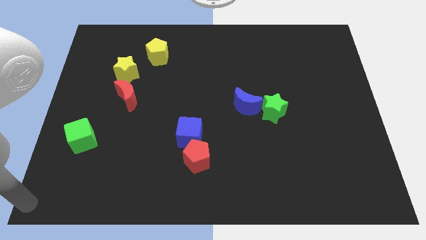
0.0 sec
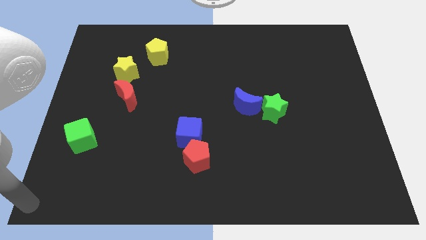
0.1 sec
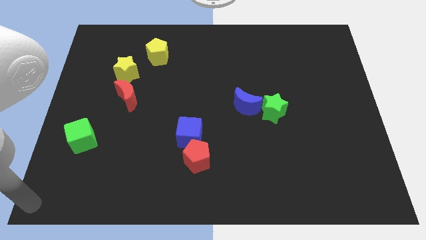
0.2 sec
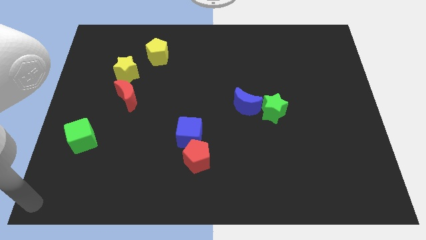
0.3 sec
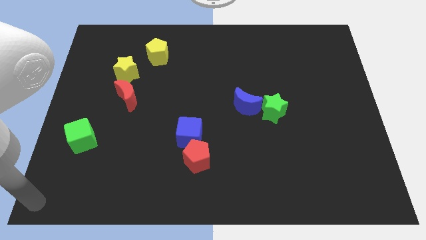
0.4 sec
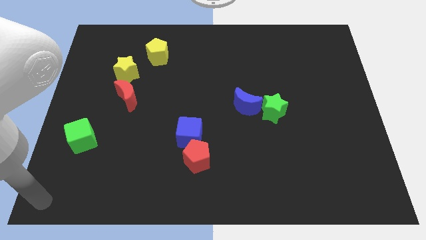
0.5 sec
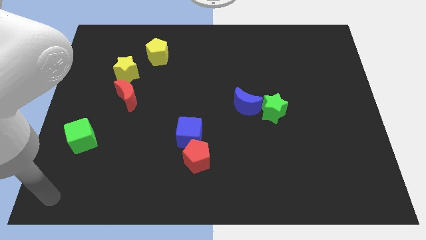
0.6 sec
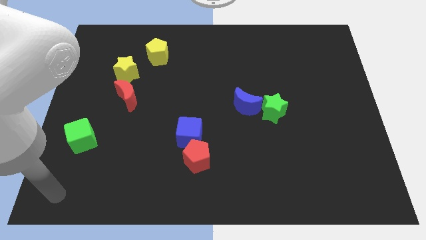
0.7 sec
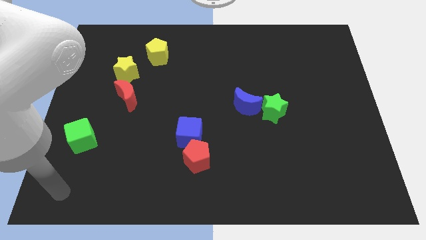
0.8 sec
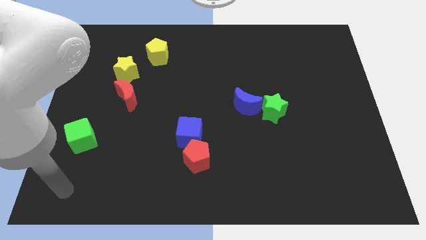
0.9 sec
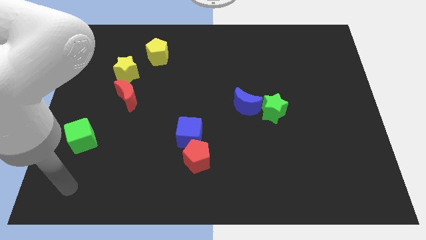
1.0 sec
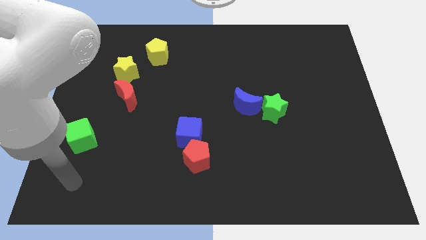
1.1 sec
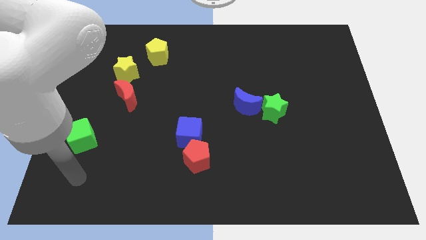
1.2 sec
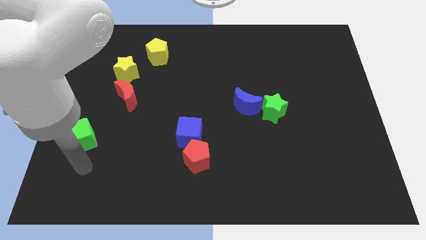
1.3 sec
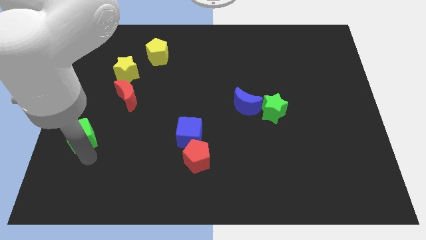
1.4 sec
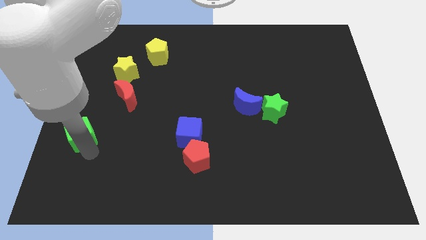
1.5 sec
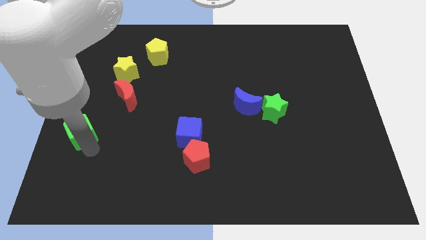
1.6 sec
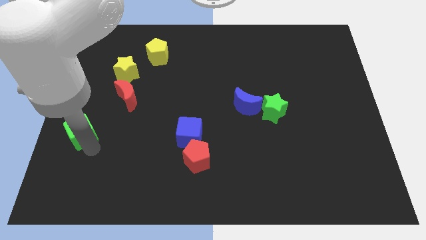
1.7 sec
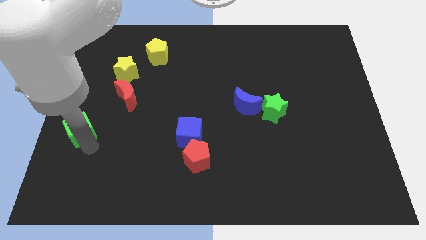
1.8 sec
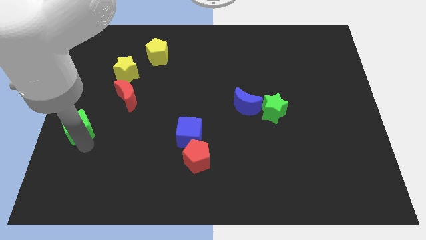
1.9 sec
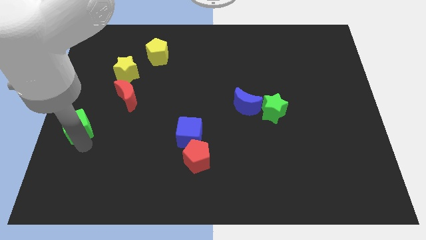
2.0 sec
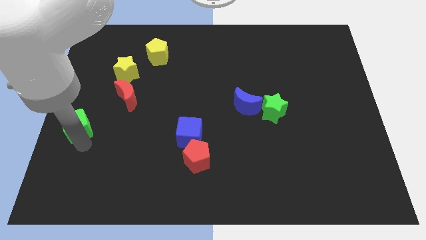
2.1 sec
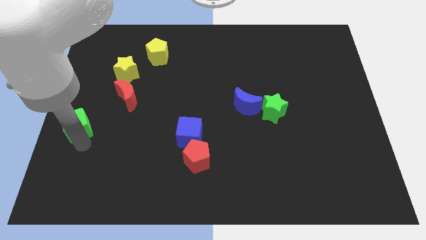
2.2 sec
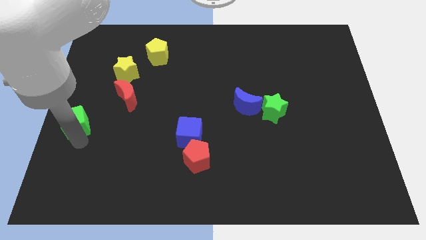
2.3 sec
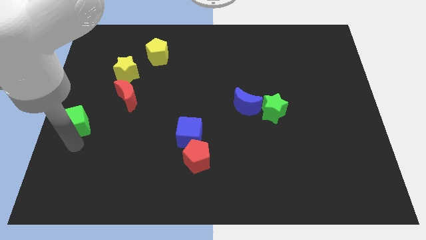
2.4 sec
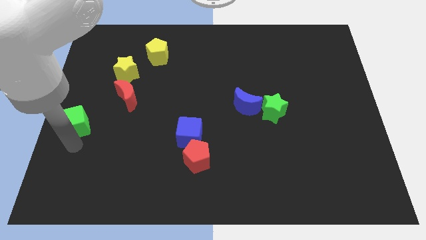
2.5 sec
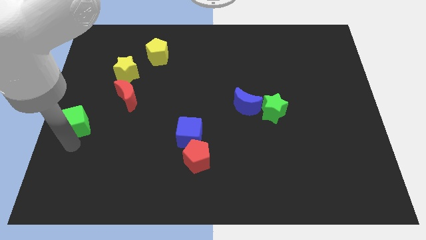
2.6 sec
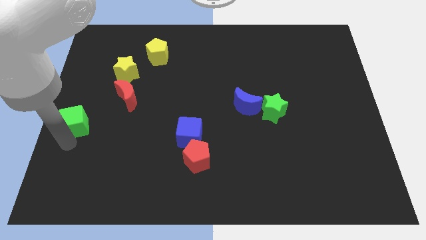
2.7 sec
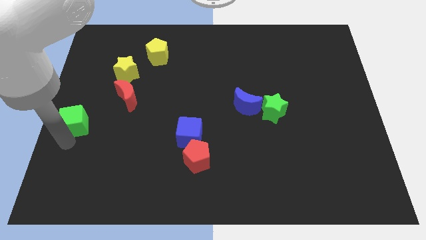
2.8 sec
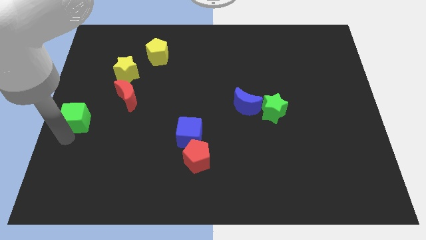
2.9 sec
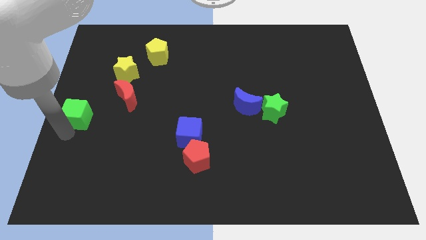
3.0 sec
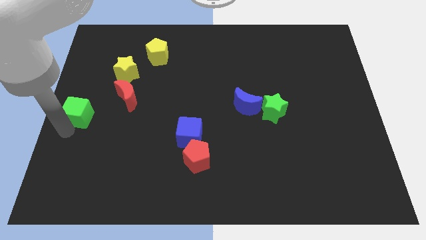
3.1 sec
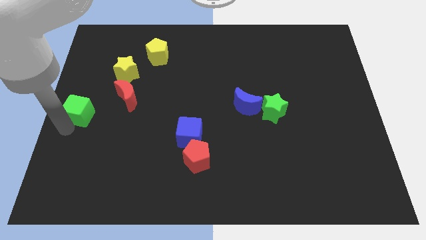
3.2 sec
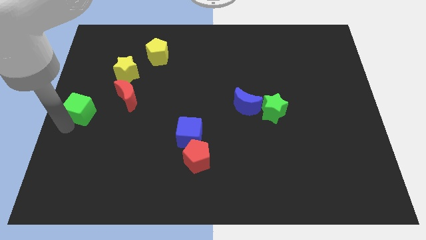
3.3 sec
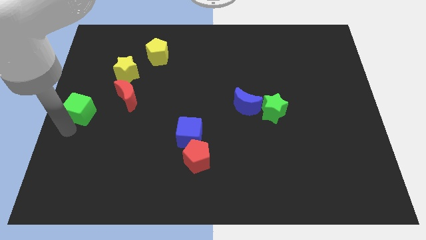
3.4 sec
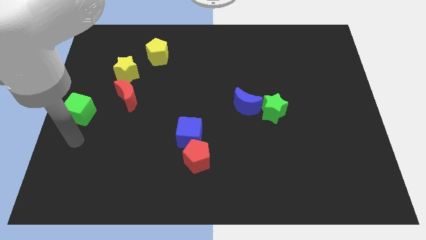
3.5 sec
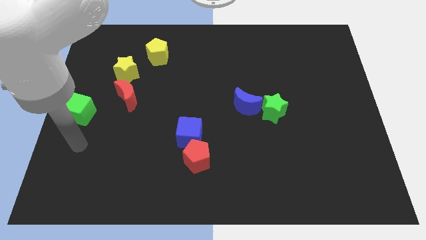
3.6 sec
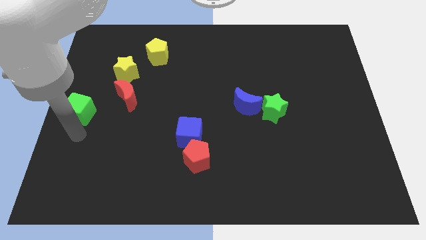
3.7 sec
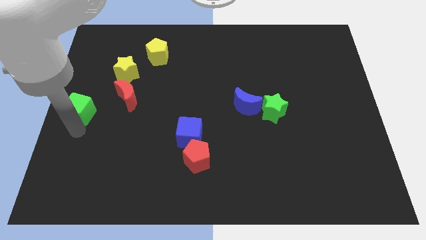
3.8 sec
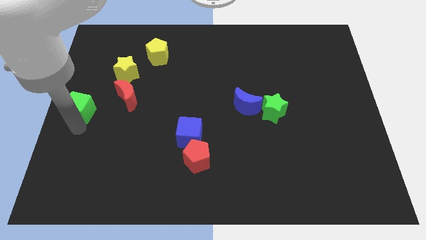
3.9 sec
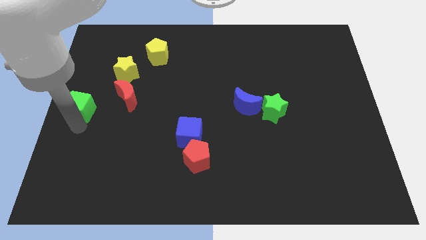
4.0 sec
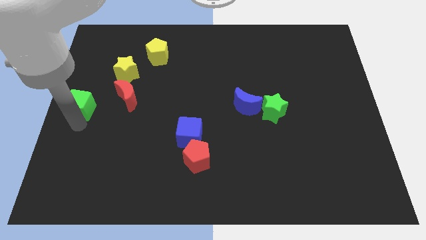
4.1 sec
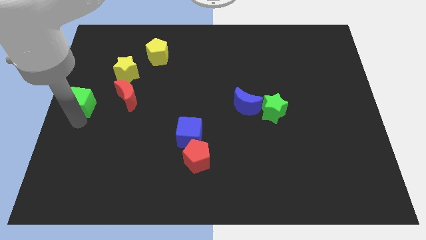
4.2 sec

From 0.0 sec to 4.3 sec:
move the green cube to the left of the red moon

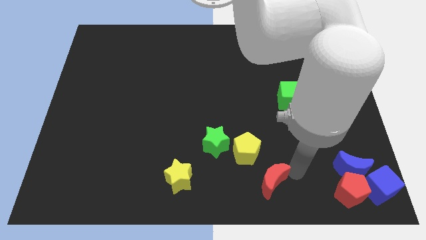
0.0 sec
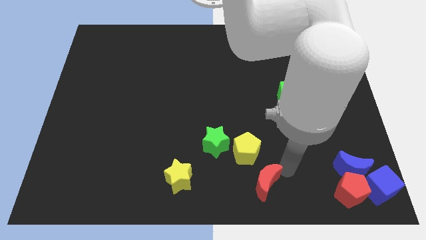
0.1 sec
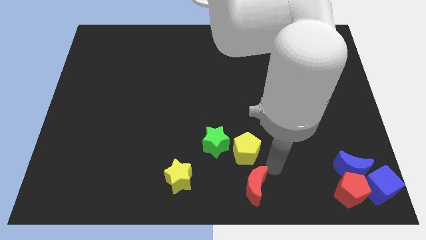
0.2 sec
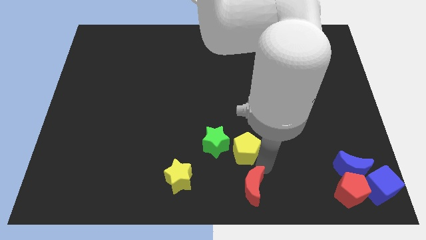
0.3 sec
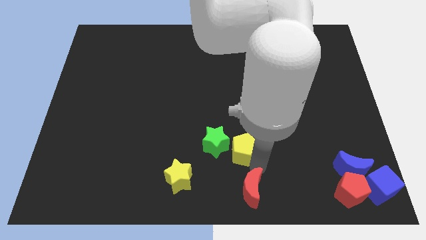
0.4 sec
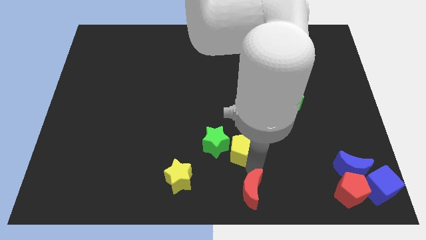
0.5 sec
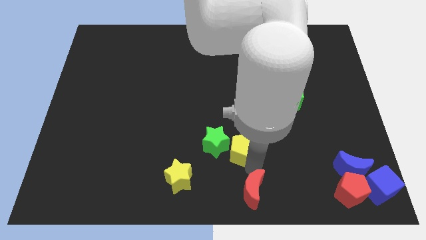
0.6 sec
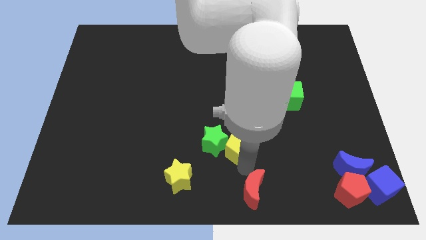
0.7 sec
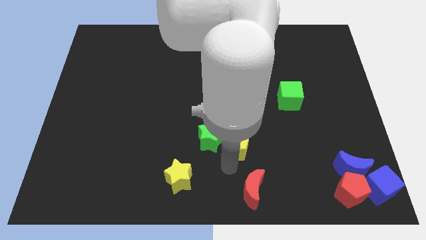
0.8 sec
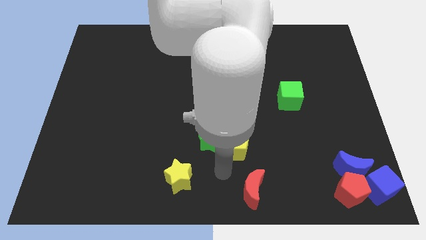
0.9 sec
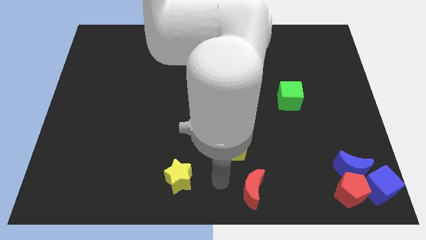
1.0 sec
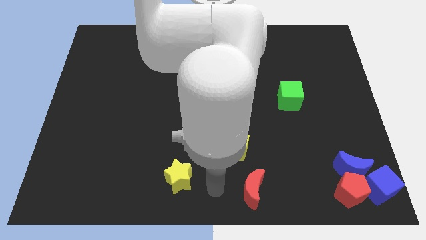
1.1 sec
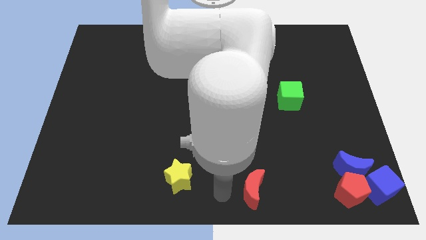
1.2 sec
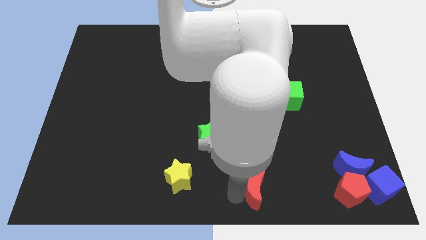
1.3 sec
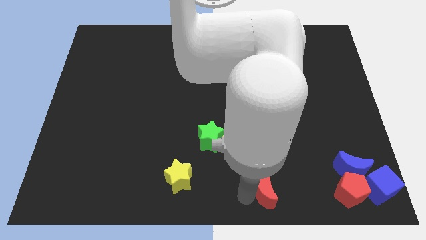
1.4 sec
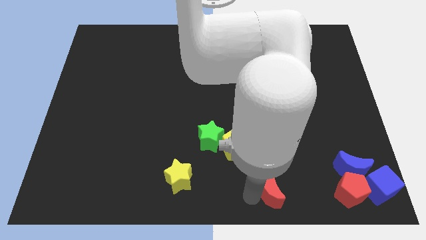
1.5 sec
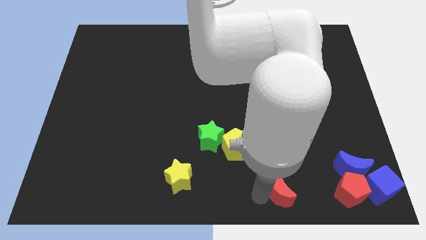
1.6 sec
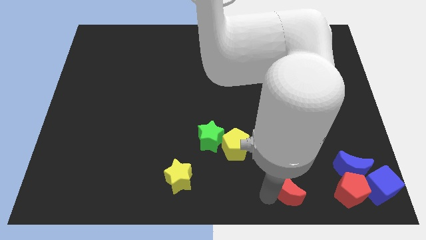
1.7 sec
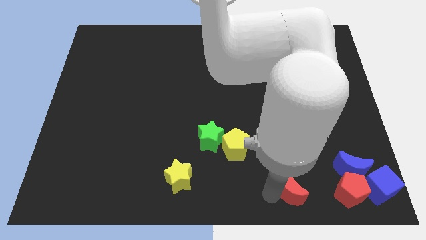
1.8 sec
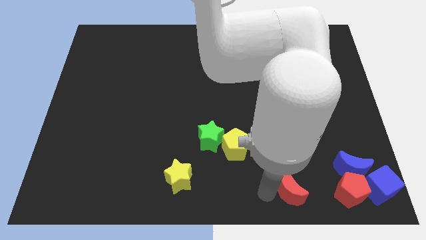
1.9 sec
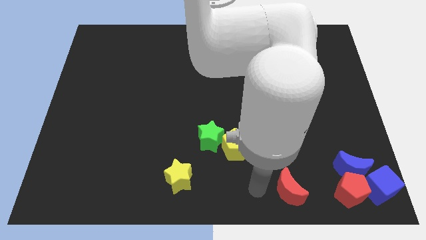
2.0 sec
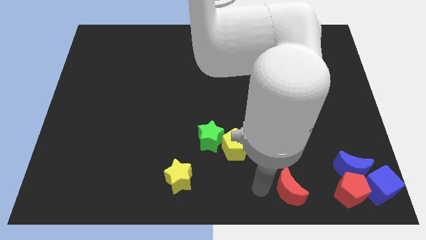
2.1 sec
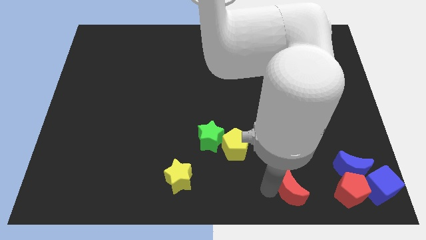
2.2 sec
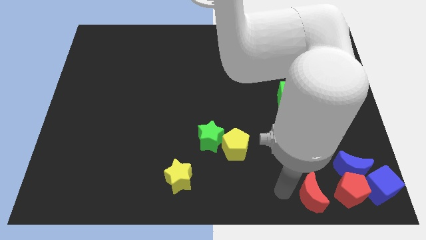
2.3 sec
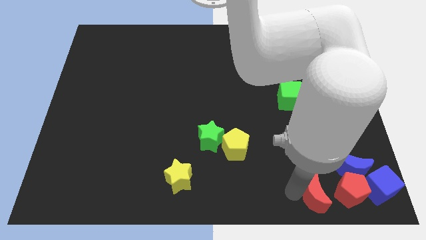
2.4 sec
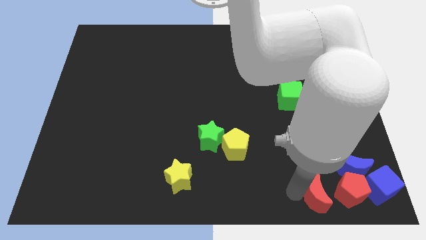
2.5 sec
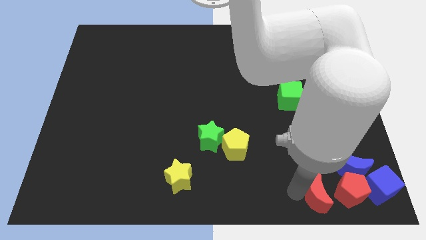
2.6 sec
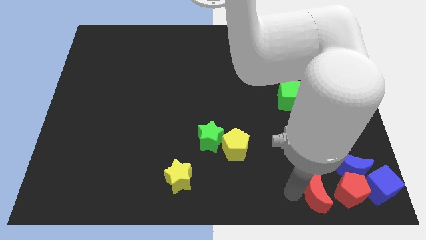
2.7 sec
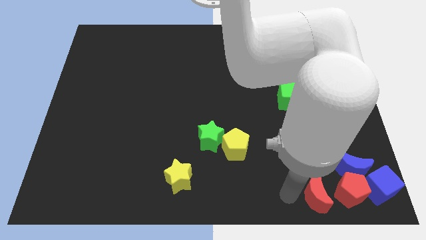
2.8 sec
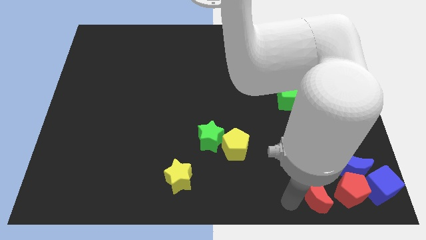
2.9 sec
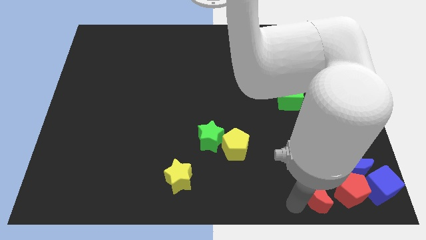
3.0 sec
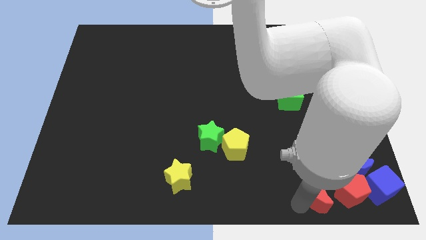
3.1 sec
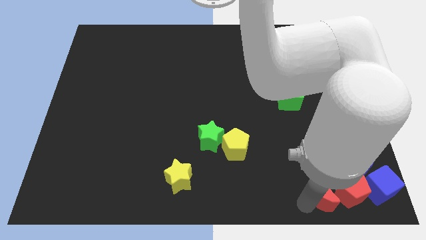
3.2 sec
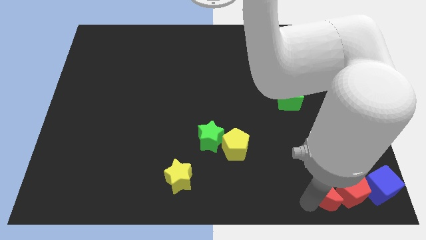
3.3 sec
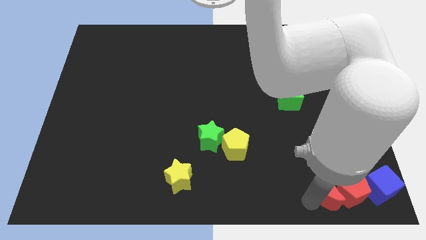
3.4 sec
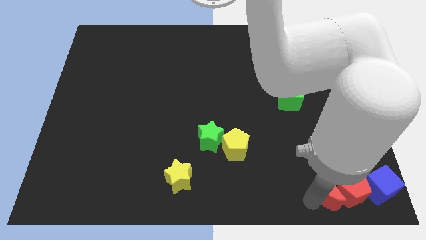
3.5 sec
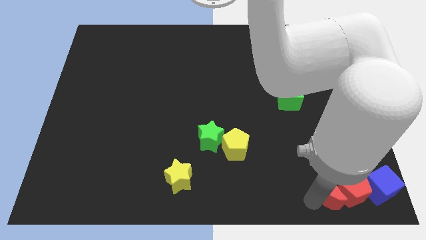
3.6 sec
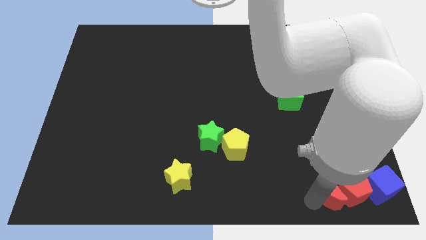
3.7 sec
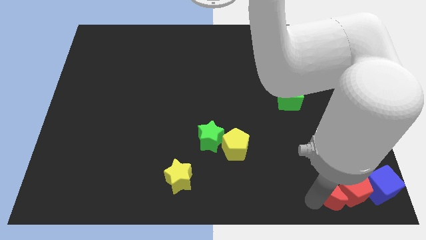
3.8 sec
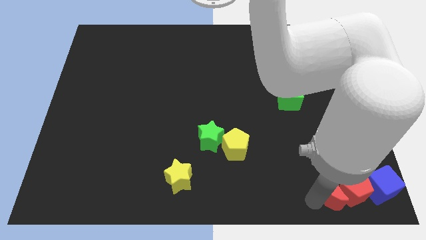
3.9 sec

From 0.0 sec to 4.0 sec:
drag red moon into red pentagon

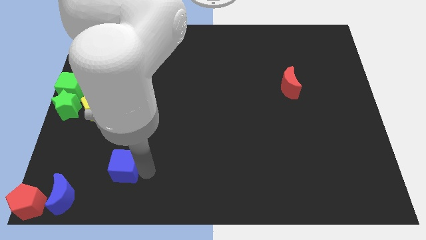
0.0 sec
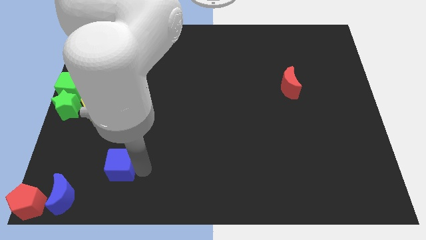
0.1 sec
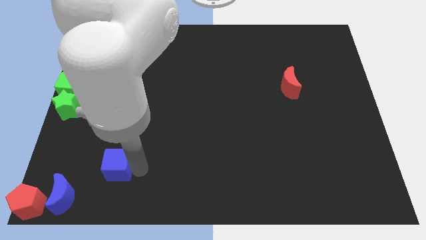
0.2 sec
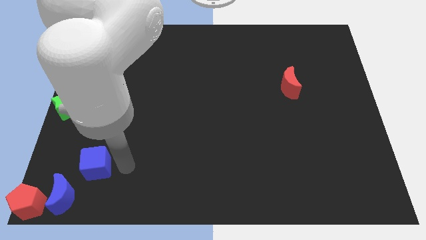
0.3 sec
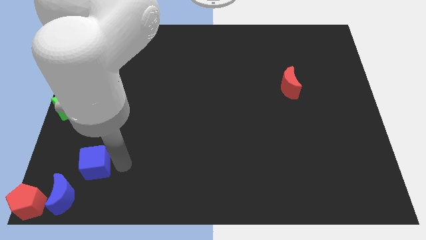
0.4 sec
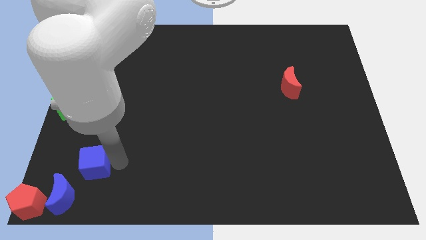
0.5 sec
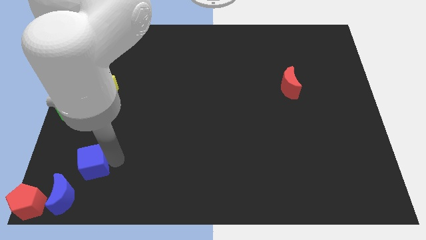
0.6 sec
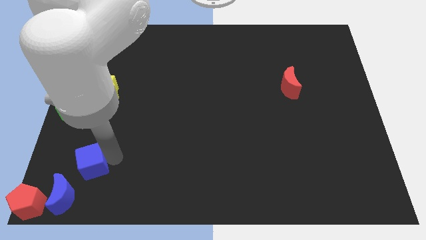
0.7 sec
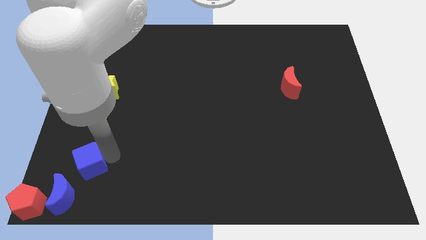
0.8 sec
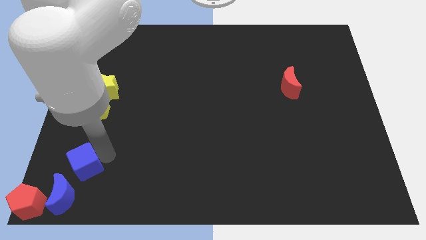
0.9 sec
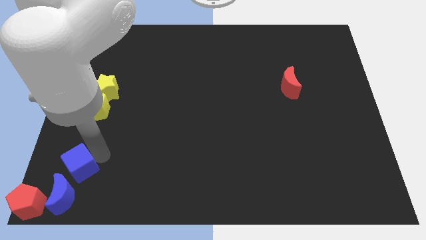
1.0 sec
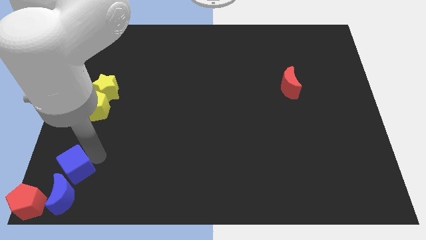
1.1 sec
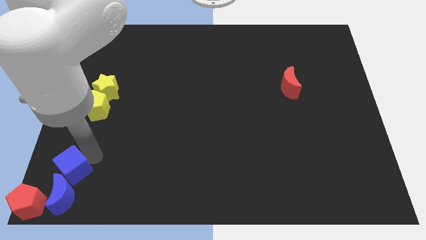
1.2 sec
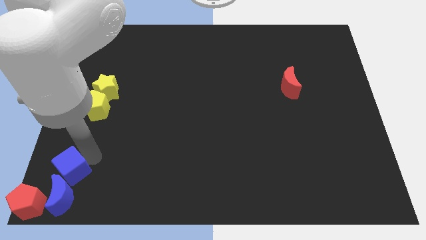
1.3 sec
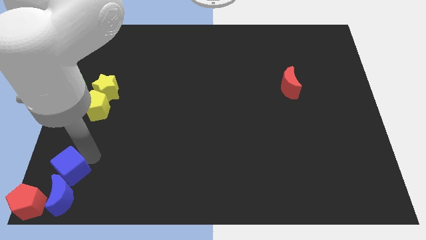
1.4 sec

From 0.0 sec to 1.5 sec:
push blue cube into blue moon
